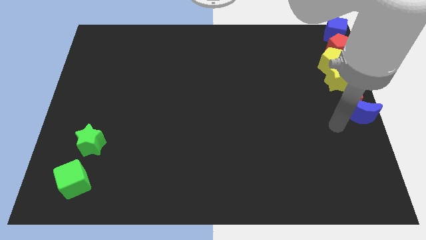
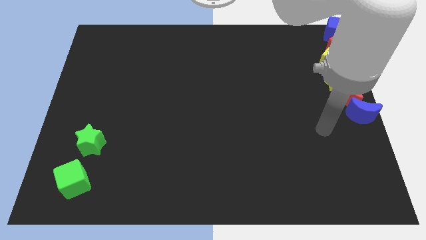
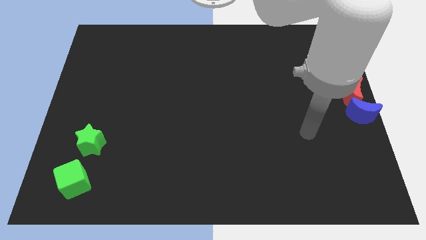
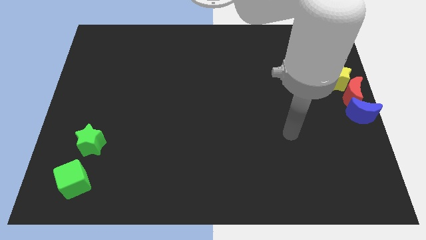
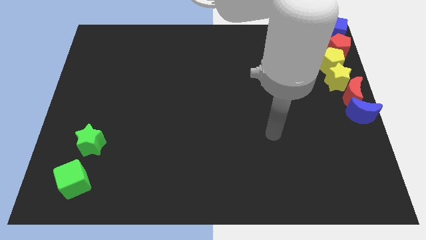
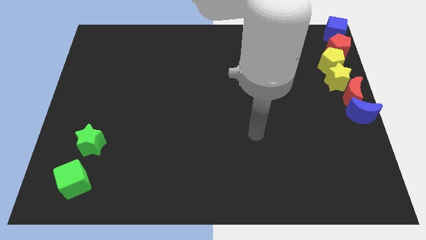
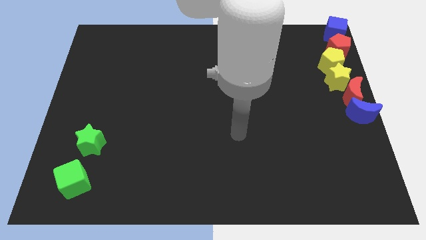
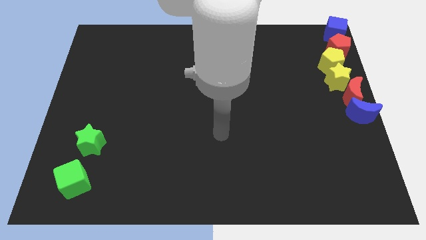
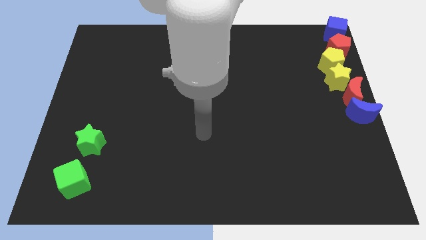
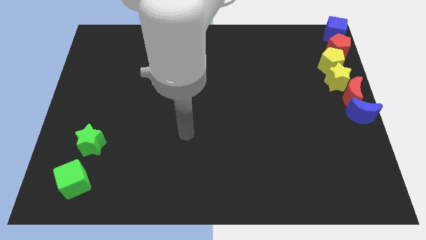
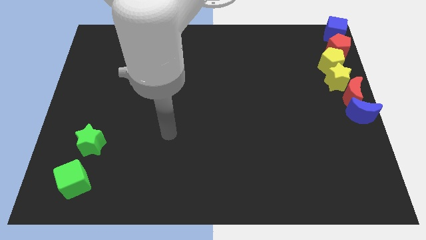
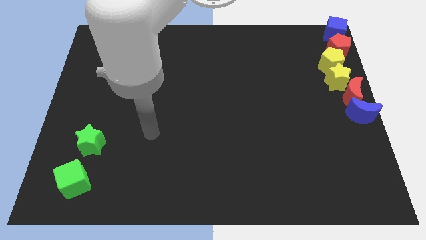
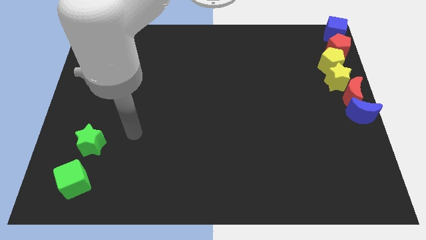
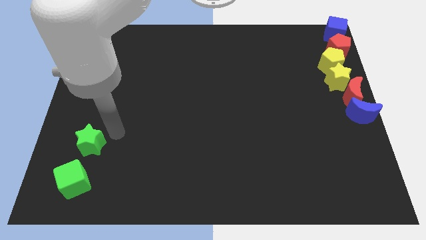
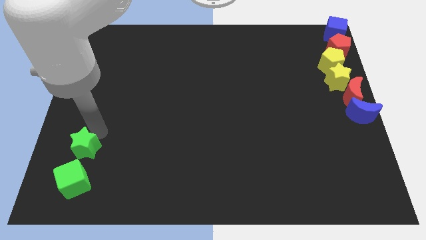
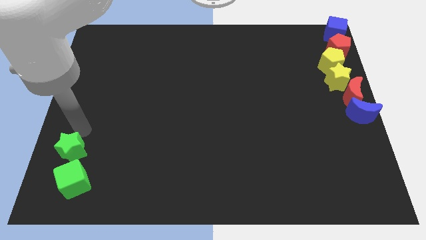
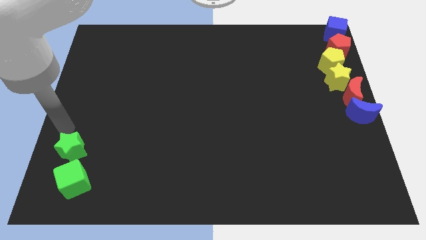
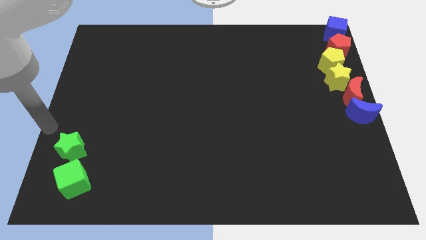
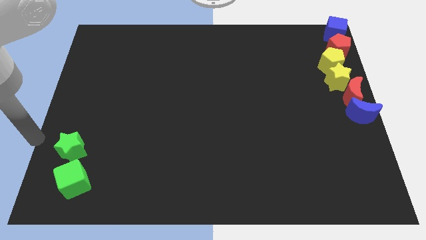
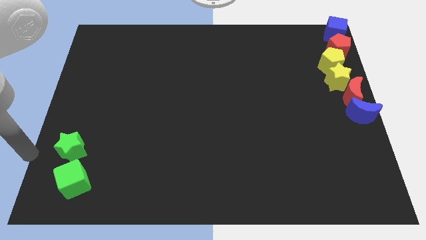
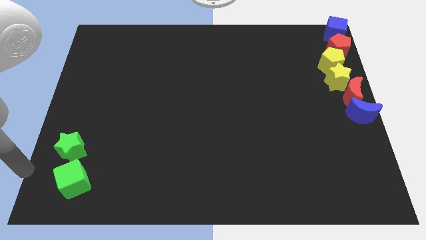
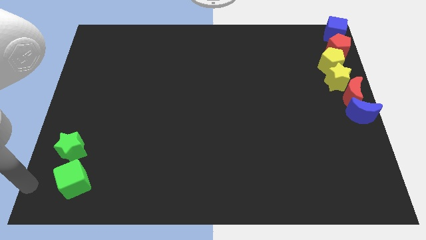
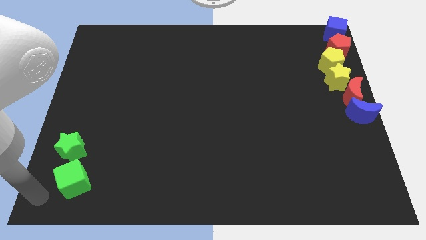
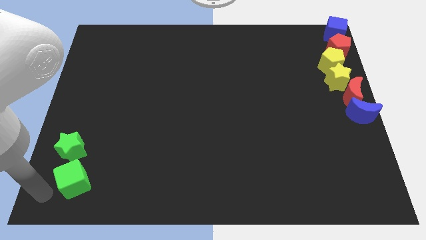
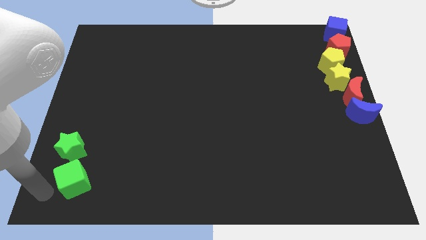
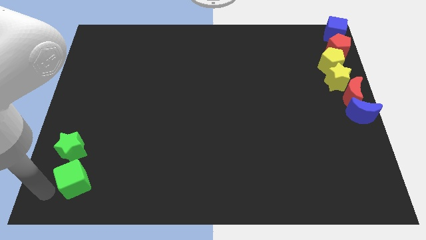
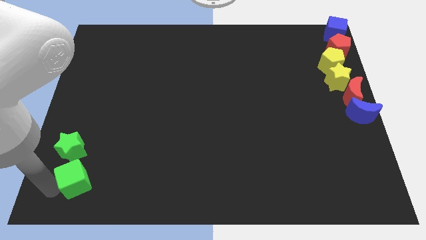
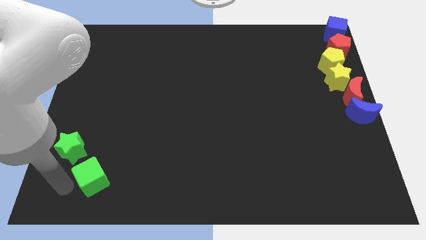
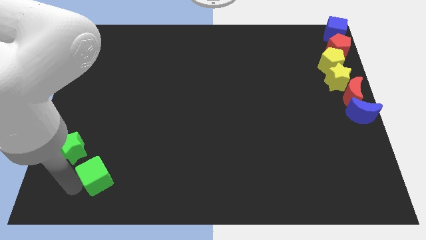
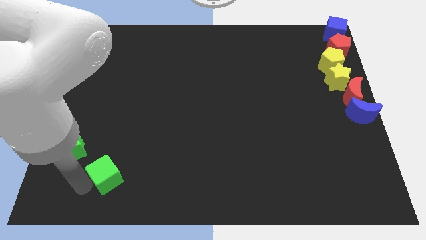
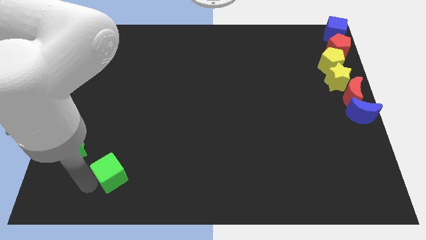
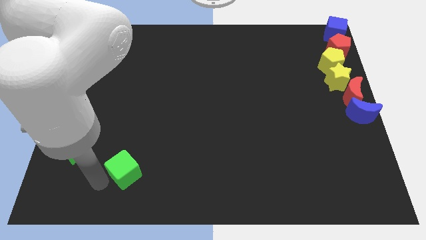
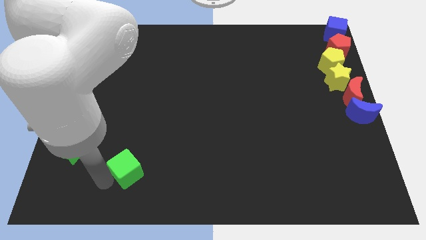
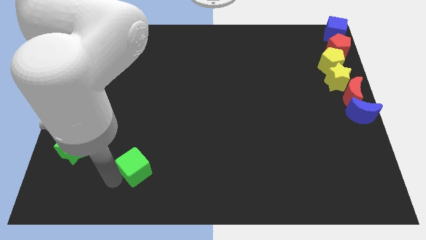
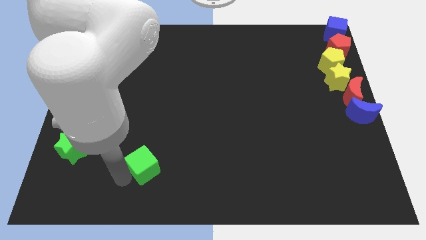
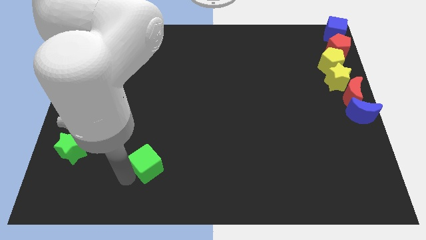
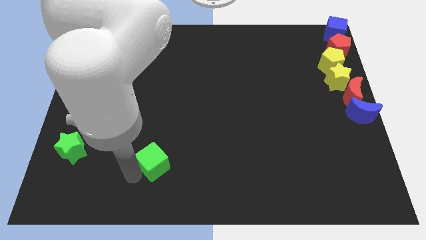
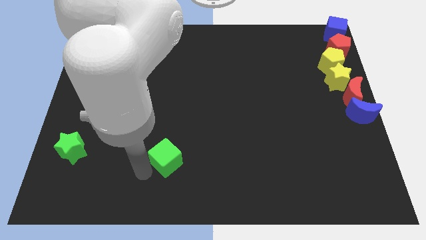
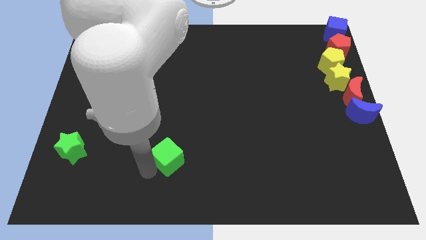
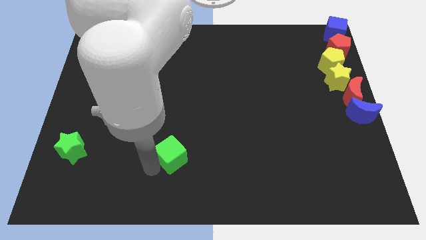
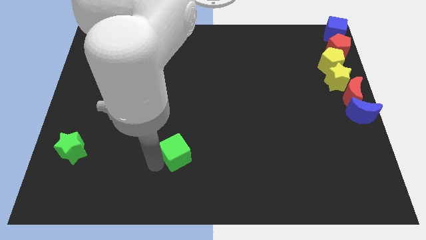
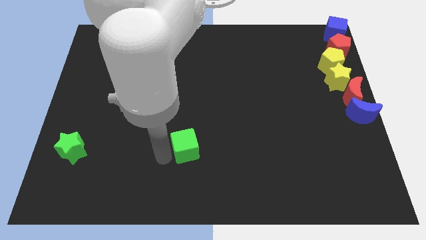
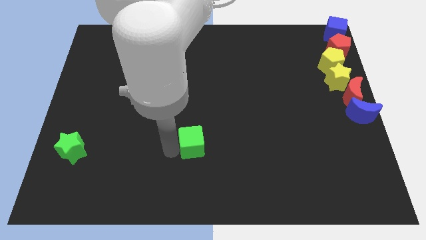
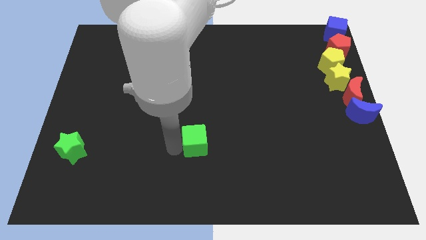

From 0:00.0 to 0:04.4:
push the green cube towards the right side of the board

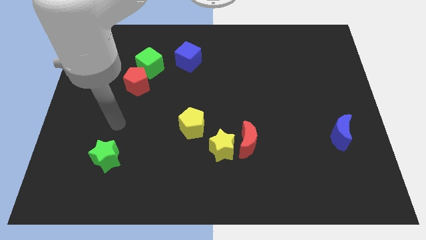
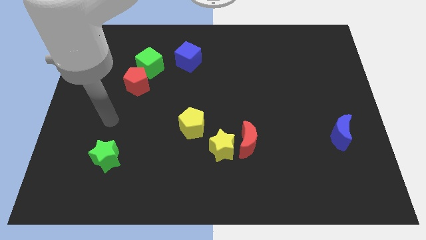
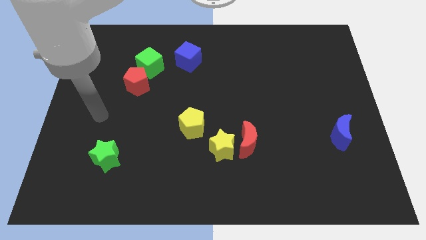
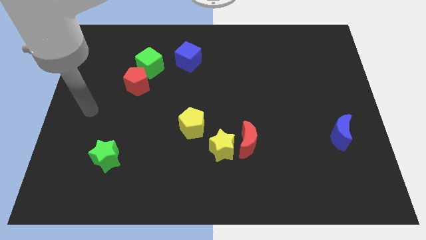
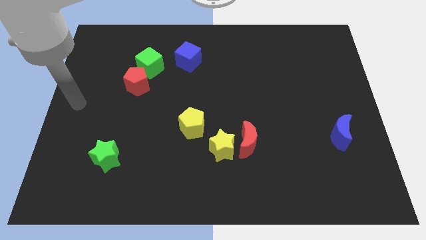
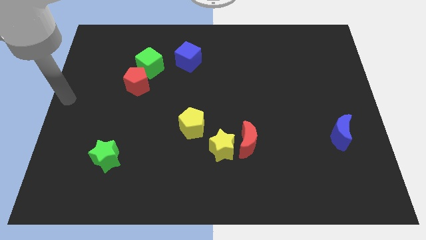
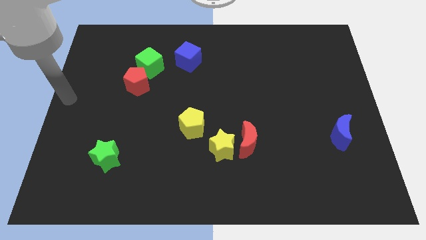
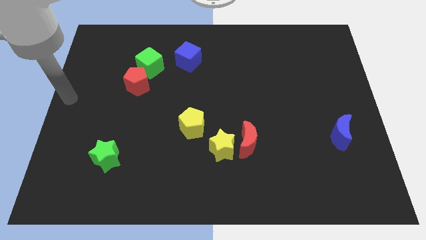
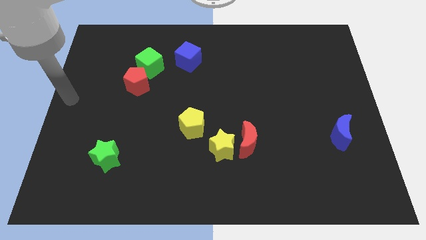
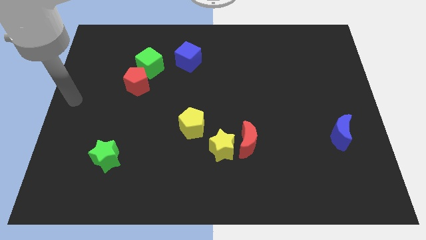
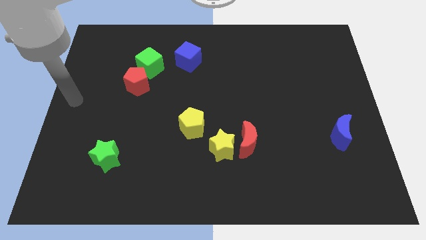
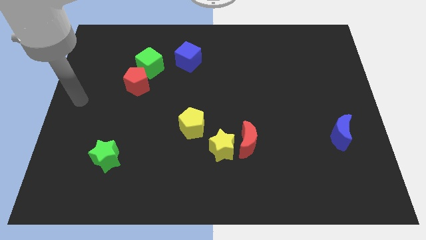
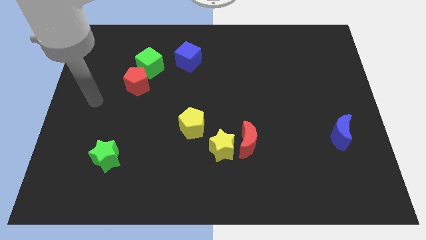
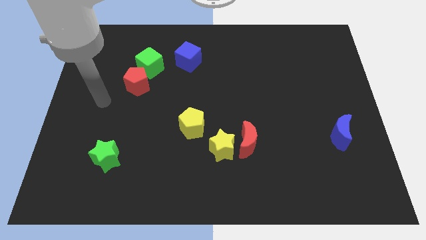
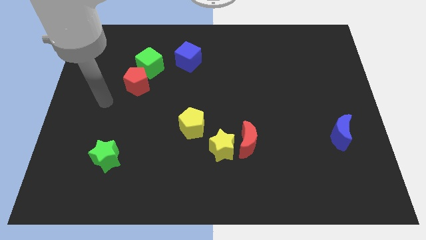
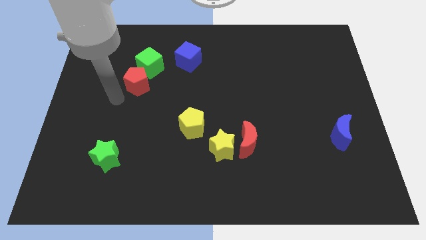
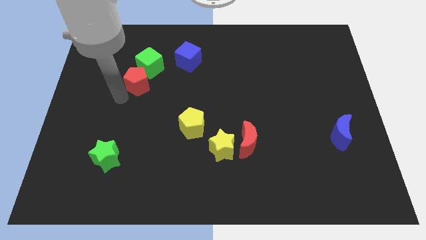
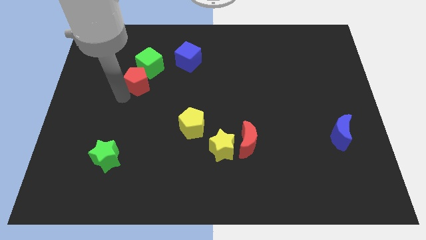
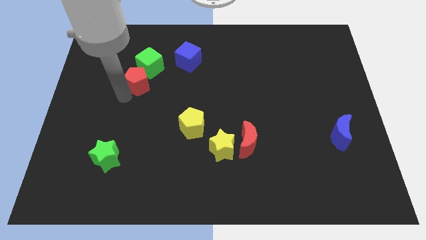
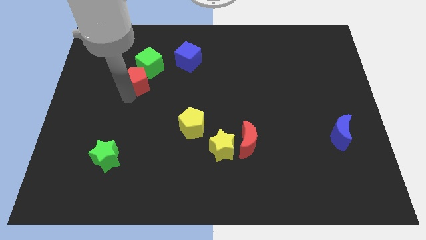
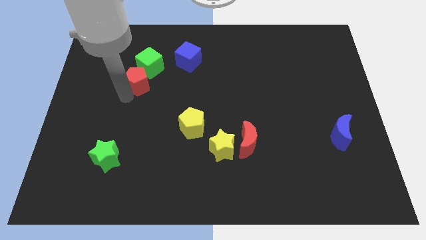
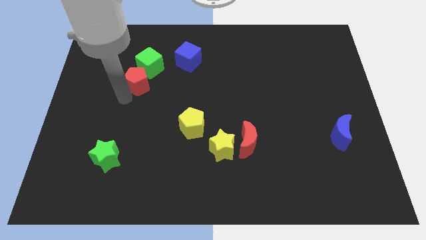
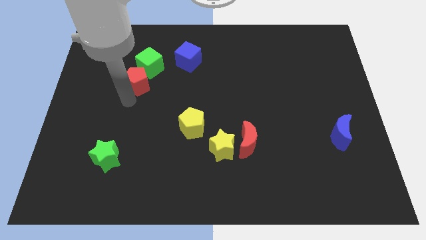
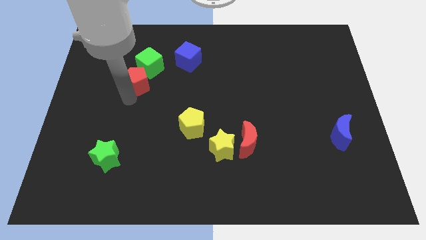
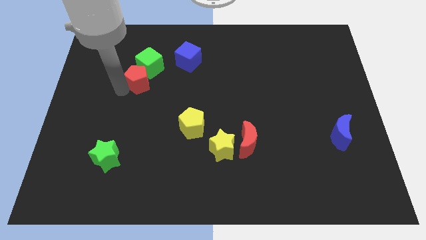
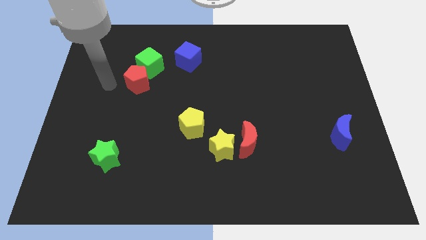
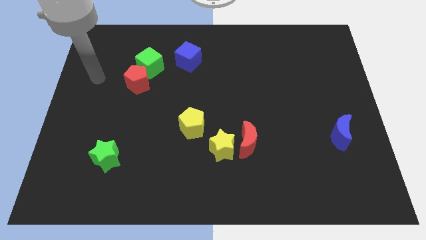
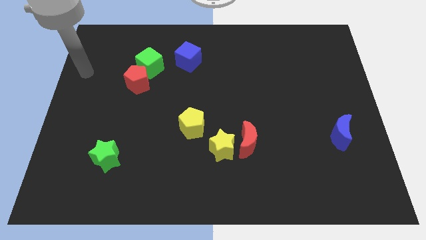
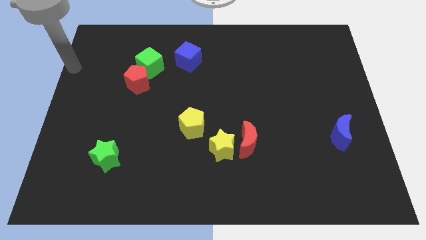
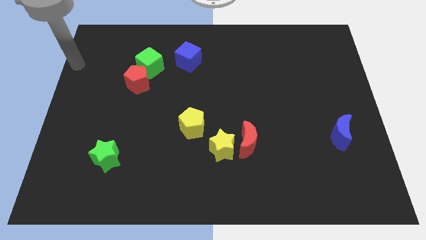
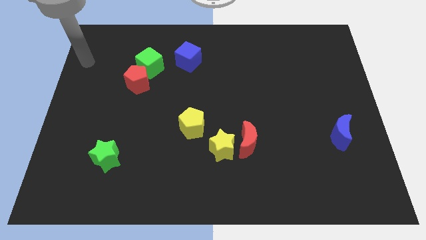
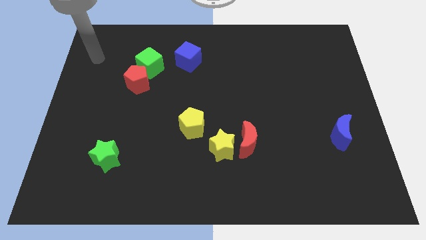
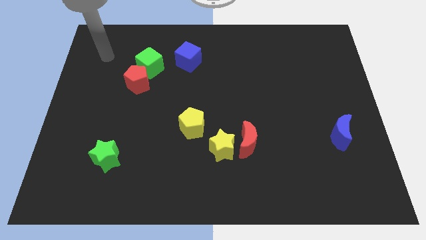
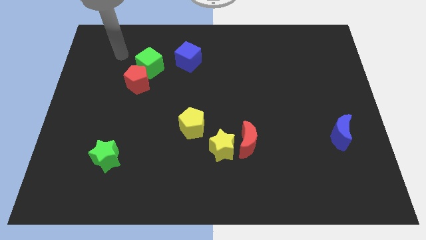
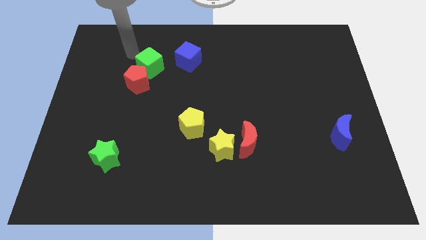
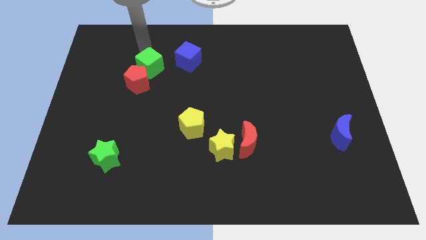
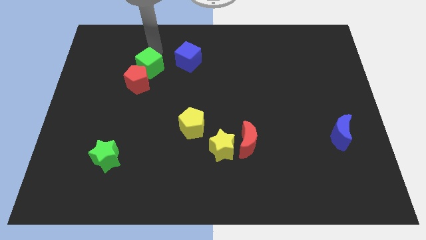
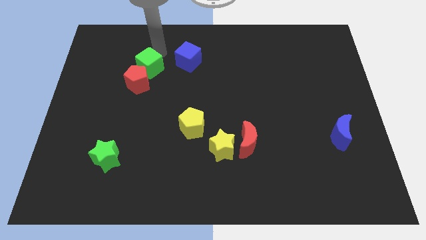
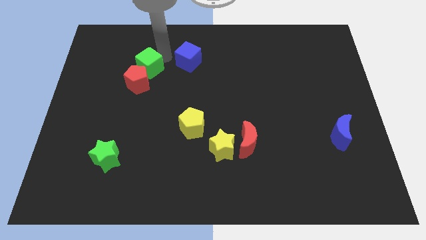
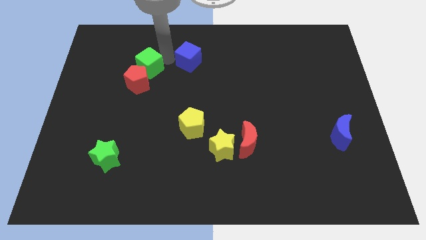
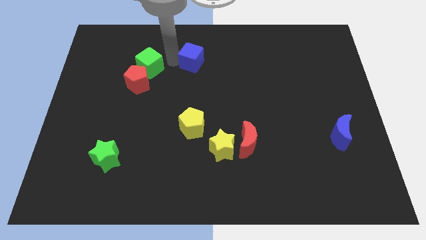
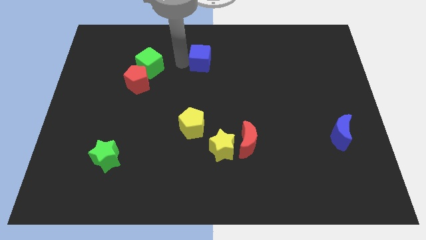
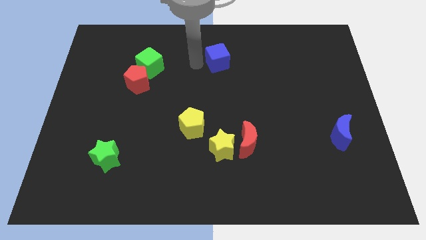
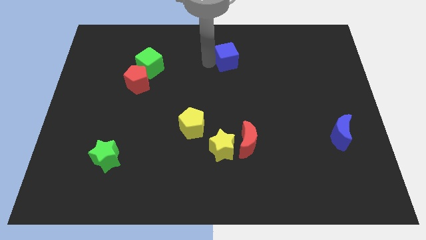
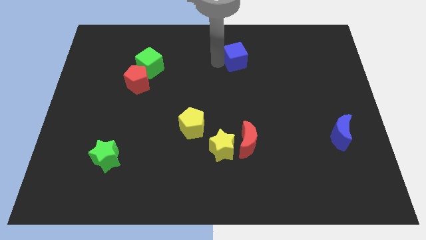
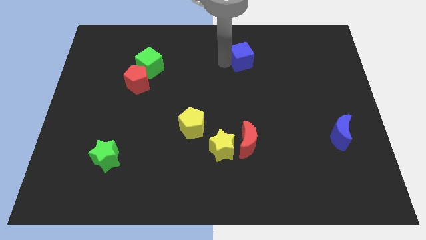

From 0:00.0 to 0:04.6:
push the blue cube to the top of the red crescent
